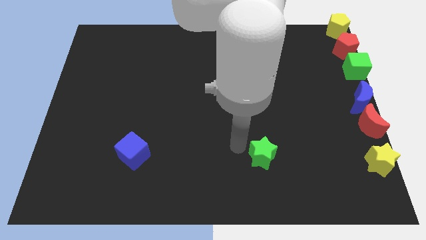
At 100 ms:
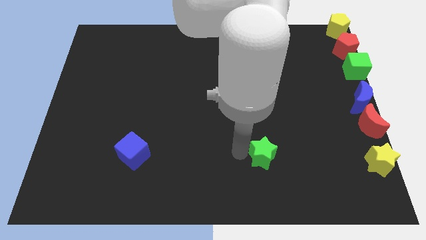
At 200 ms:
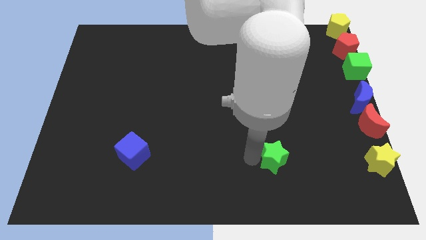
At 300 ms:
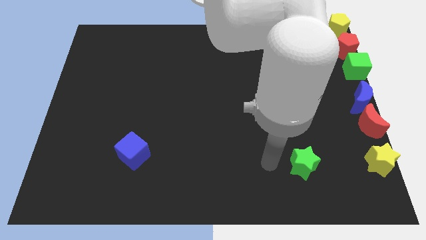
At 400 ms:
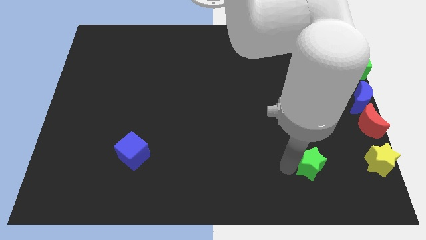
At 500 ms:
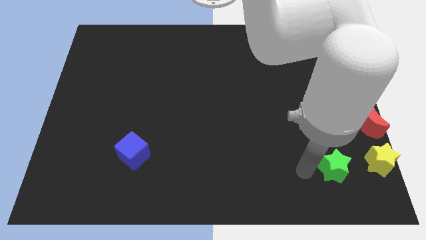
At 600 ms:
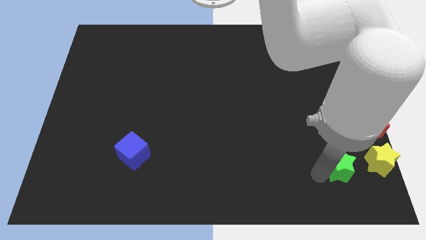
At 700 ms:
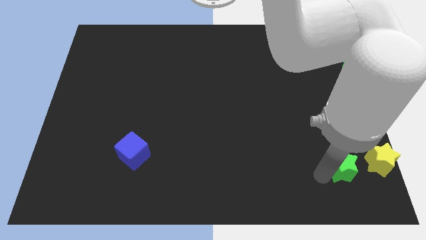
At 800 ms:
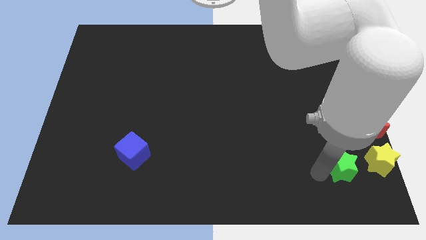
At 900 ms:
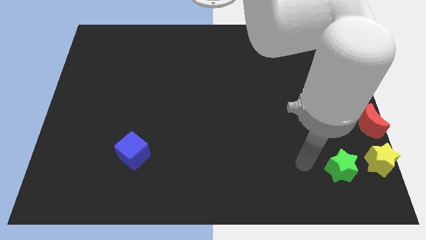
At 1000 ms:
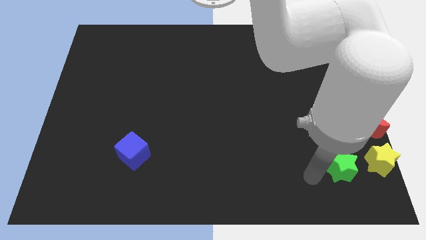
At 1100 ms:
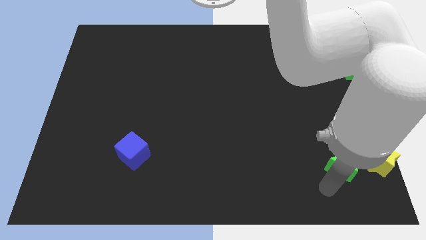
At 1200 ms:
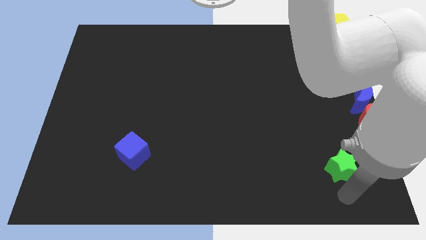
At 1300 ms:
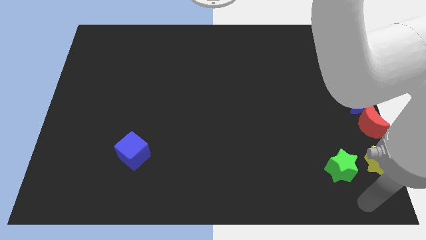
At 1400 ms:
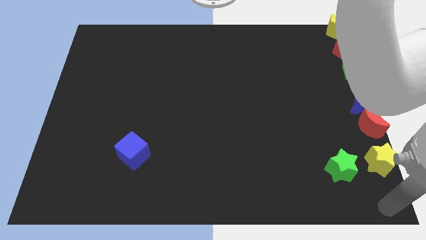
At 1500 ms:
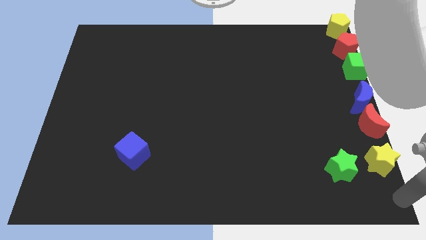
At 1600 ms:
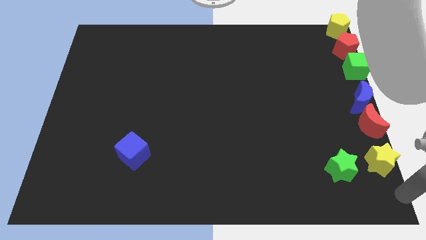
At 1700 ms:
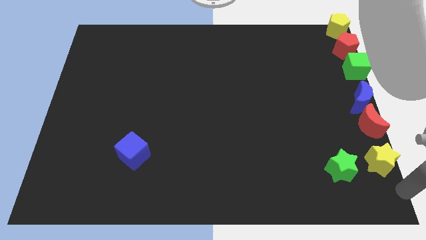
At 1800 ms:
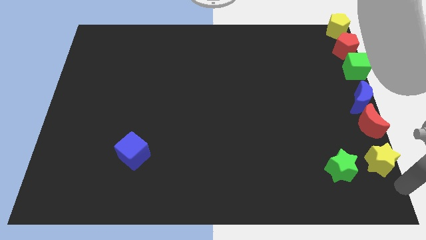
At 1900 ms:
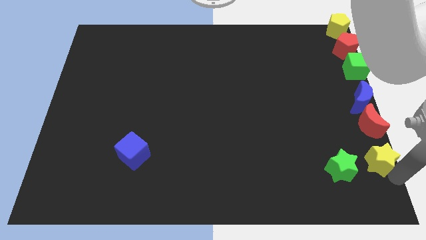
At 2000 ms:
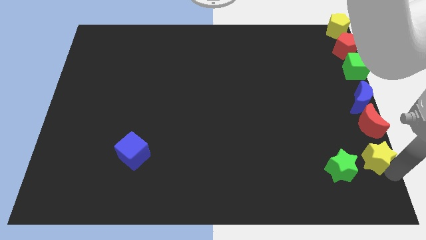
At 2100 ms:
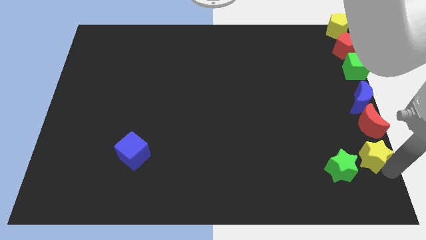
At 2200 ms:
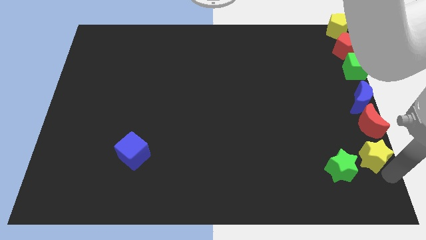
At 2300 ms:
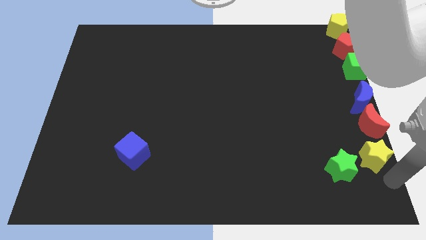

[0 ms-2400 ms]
place the yellow star to the below red moon at the bottom right side of the board

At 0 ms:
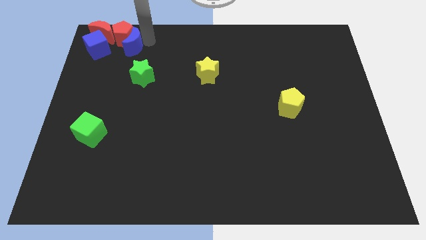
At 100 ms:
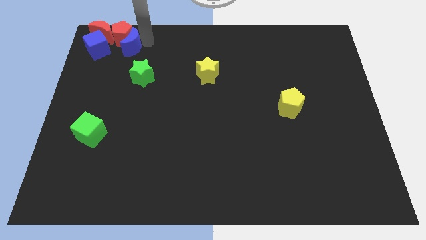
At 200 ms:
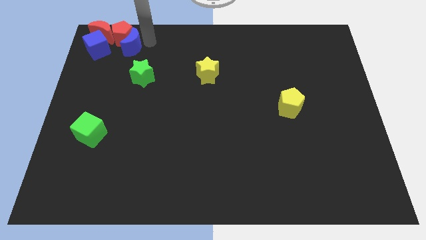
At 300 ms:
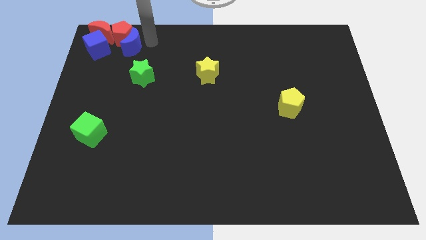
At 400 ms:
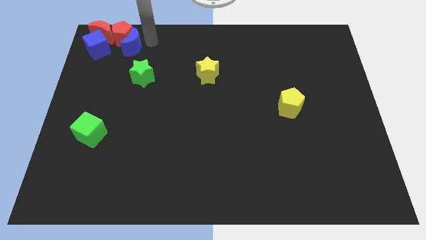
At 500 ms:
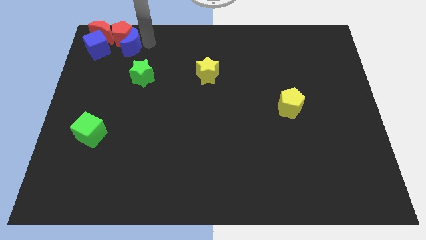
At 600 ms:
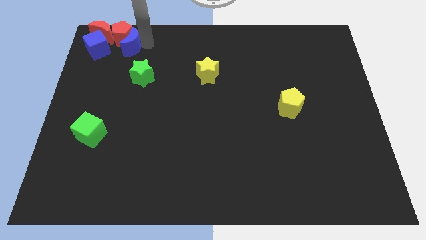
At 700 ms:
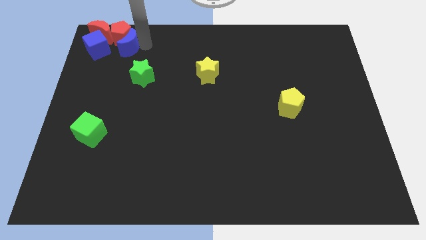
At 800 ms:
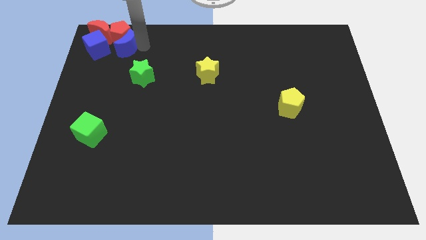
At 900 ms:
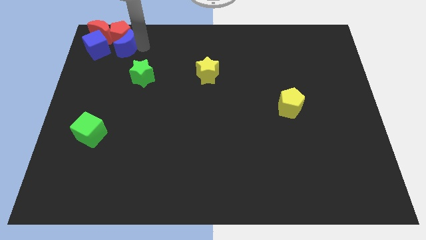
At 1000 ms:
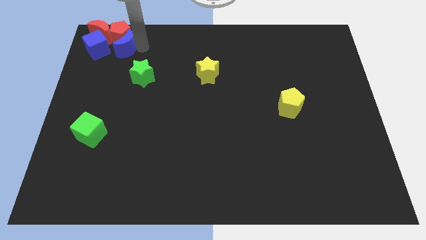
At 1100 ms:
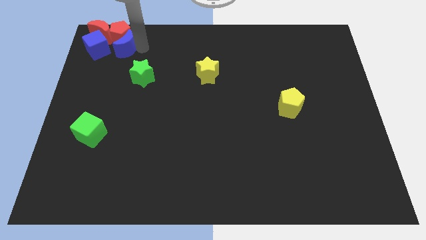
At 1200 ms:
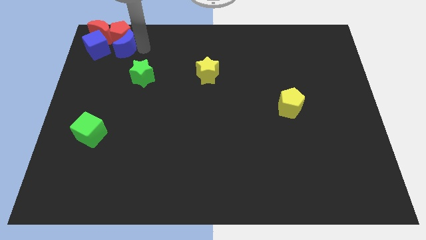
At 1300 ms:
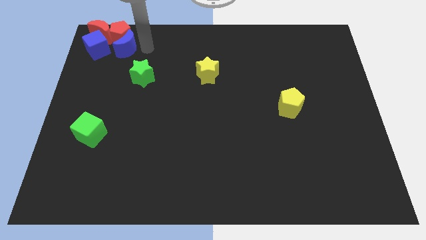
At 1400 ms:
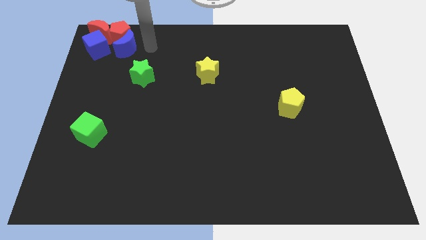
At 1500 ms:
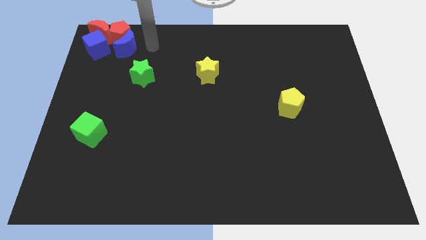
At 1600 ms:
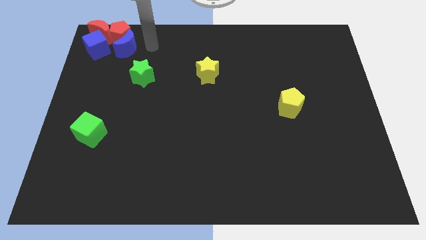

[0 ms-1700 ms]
group up all the red and blue blocks at top left side of the board

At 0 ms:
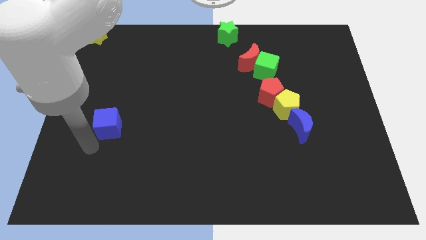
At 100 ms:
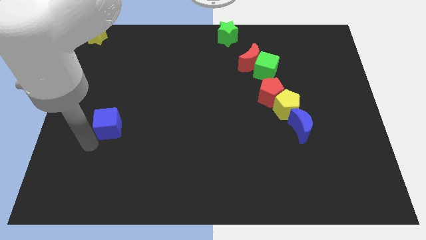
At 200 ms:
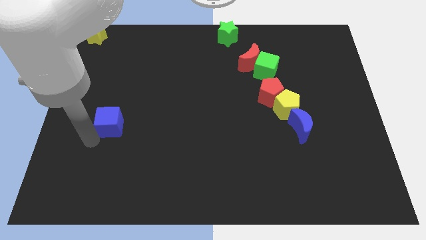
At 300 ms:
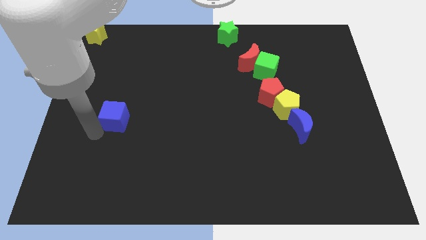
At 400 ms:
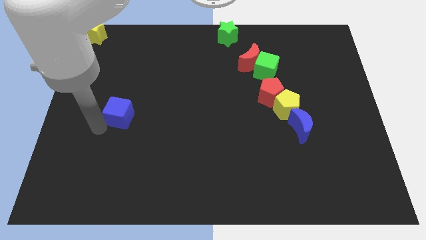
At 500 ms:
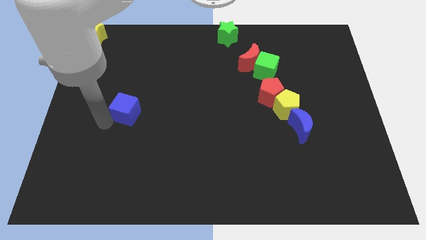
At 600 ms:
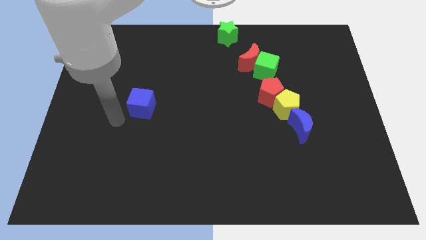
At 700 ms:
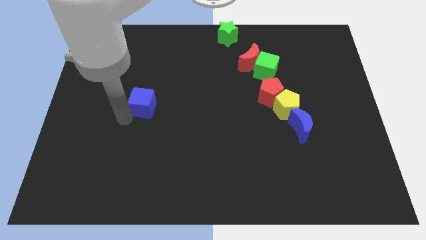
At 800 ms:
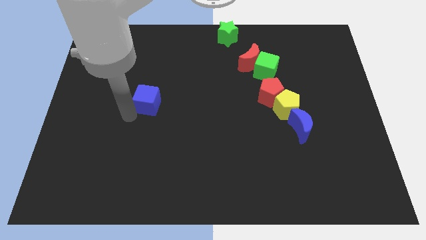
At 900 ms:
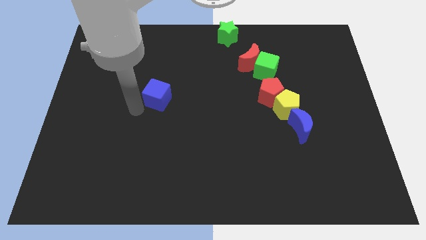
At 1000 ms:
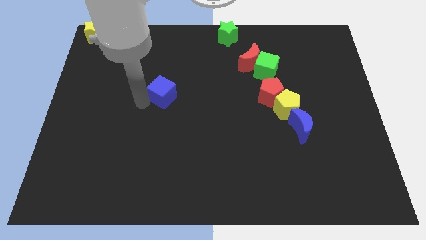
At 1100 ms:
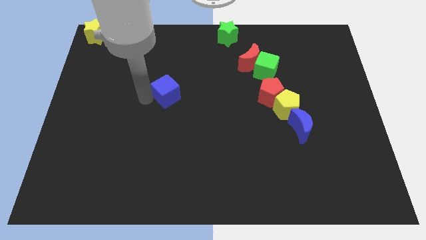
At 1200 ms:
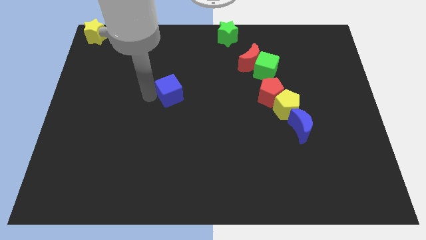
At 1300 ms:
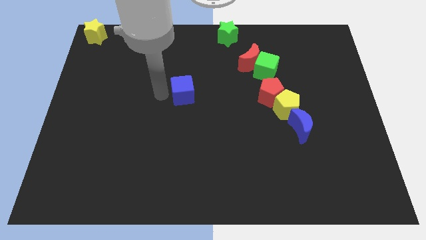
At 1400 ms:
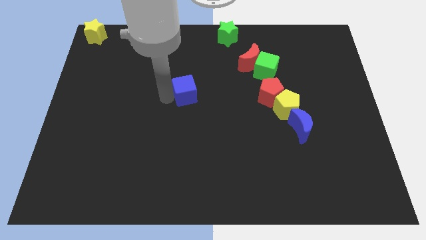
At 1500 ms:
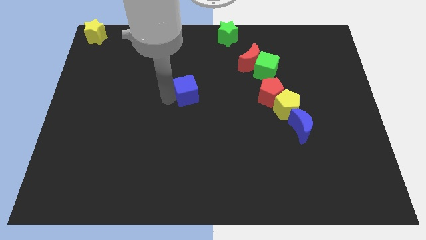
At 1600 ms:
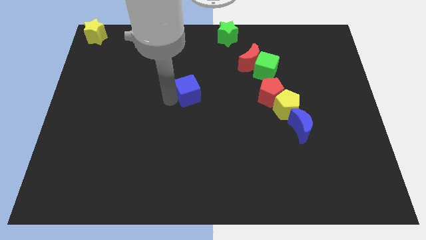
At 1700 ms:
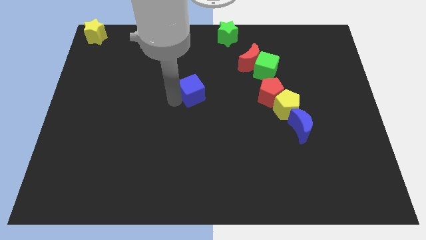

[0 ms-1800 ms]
move the blue cube horizontally left to the red pentagon

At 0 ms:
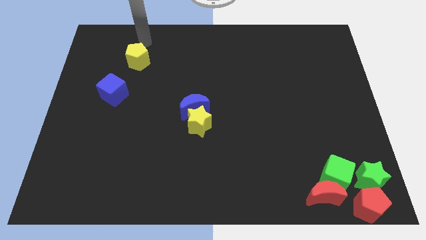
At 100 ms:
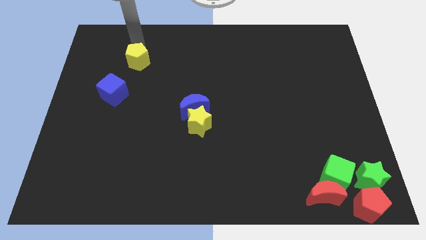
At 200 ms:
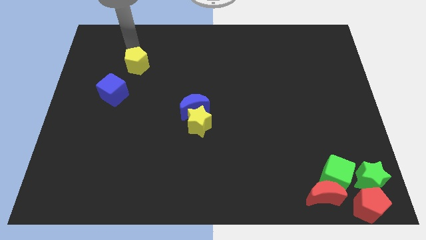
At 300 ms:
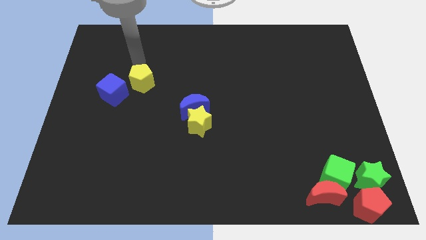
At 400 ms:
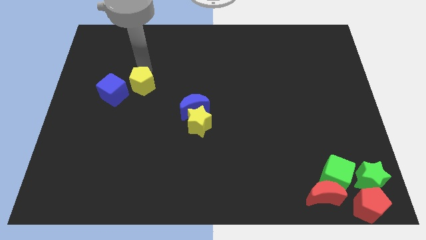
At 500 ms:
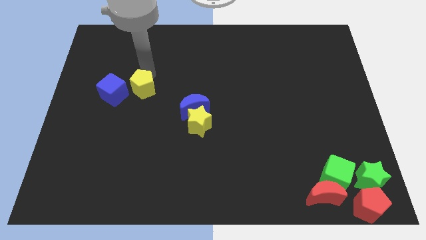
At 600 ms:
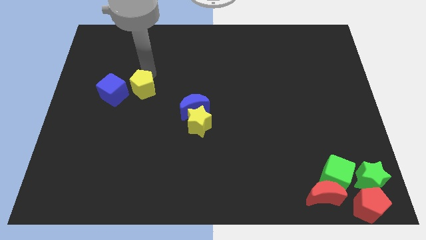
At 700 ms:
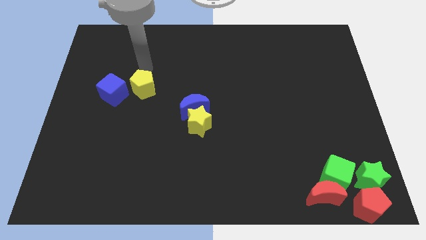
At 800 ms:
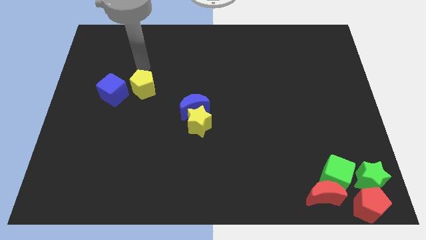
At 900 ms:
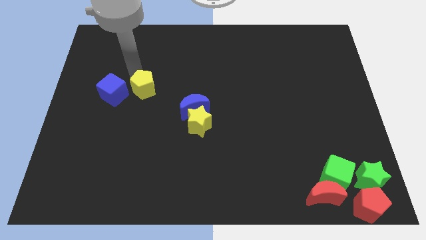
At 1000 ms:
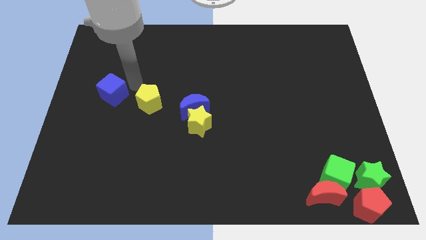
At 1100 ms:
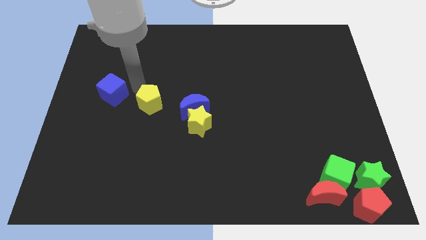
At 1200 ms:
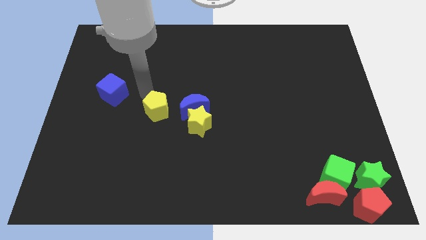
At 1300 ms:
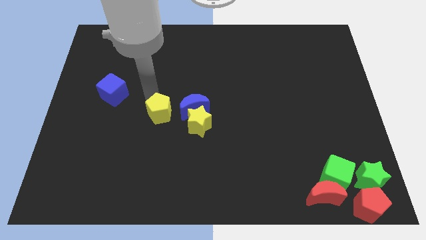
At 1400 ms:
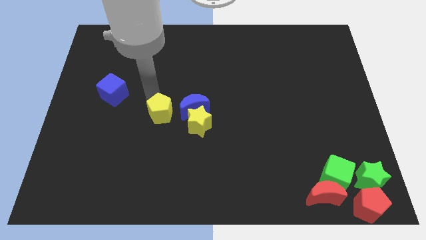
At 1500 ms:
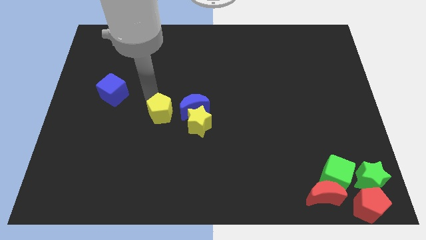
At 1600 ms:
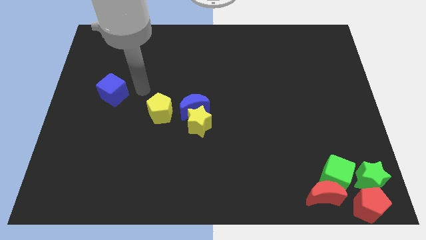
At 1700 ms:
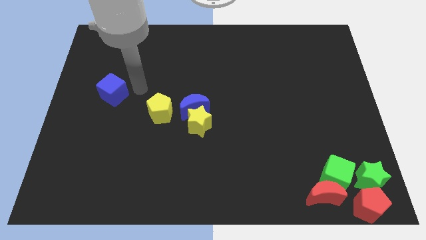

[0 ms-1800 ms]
move yellow pentagon to the left of the blue crescent

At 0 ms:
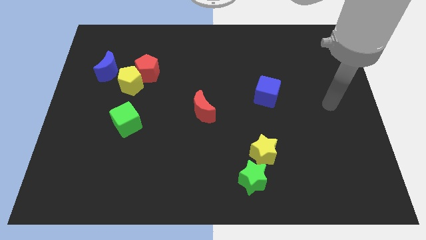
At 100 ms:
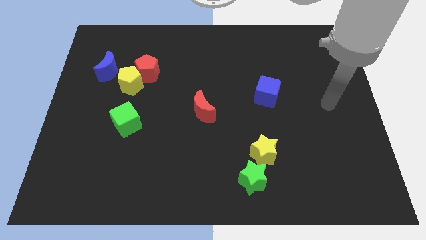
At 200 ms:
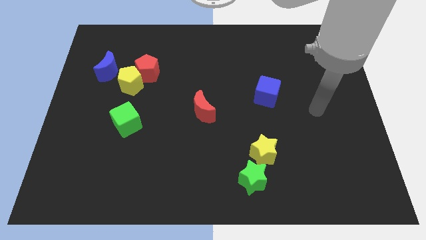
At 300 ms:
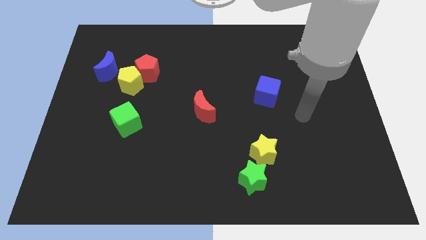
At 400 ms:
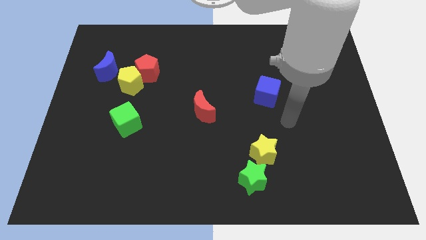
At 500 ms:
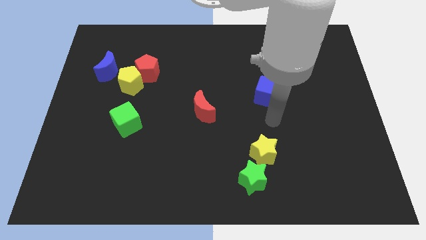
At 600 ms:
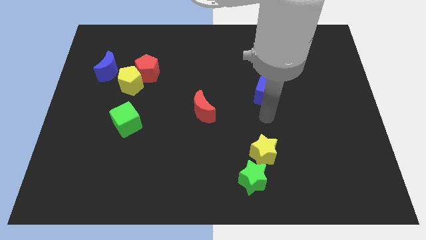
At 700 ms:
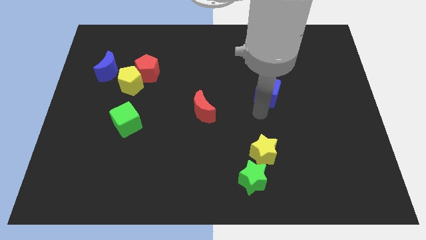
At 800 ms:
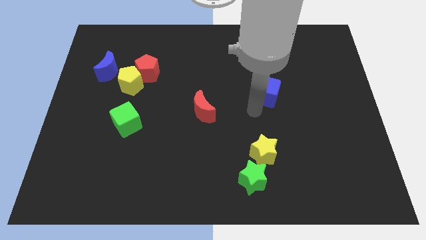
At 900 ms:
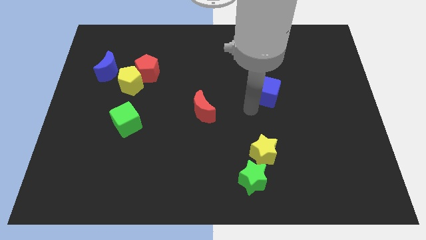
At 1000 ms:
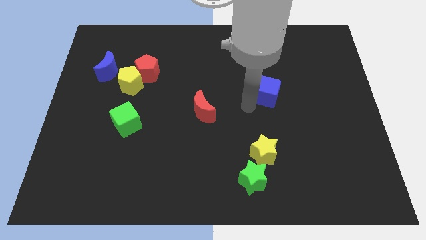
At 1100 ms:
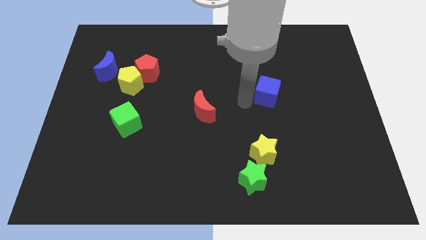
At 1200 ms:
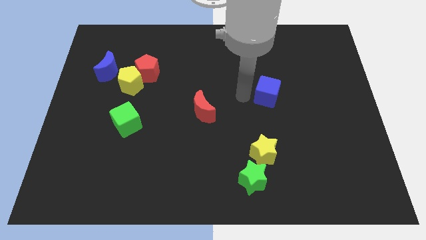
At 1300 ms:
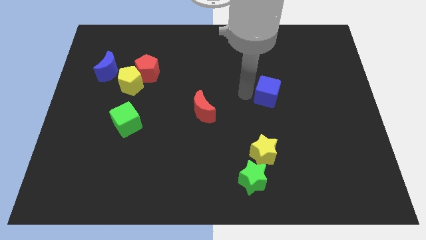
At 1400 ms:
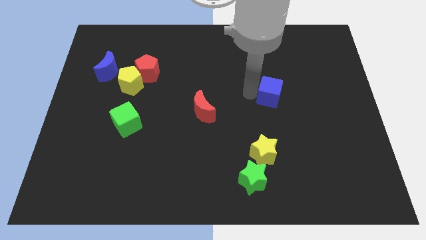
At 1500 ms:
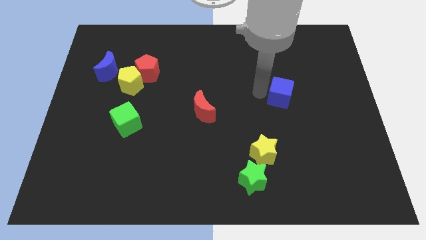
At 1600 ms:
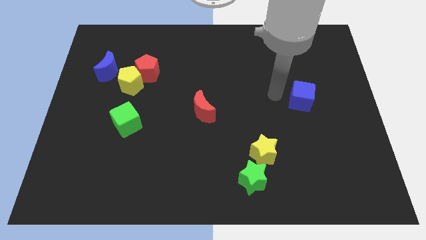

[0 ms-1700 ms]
move your arm close to the blue cube
